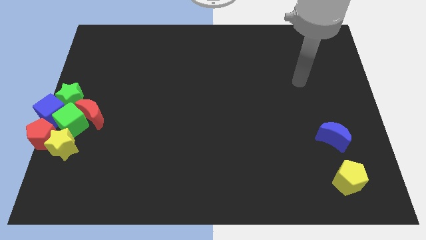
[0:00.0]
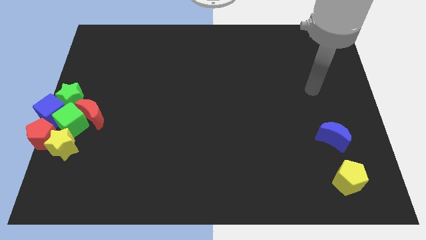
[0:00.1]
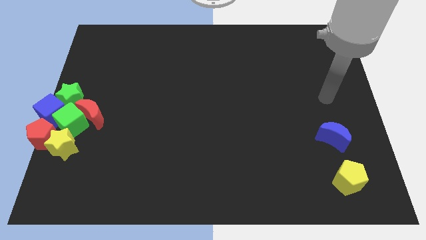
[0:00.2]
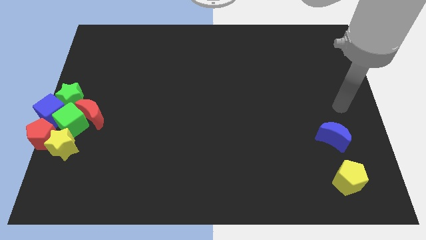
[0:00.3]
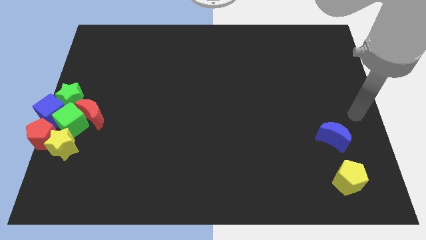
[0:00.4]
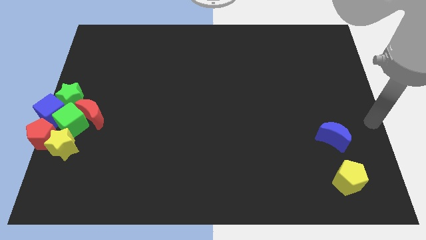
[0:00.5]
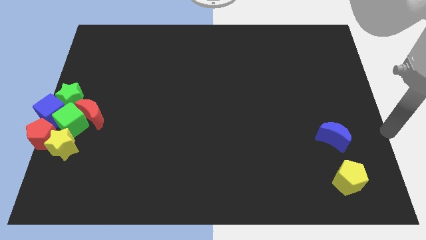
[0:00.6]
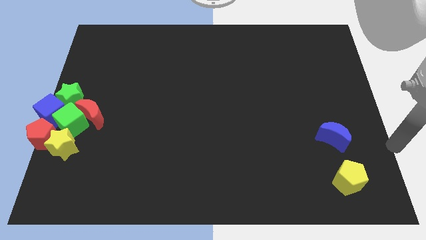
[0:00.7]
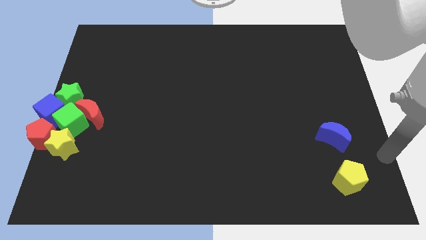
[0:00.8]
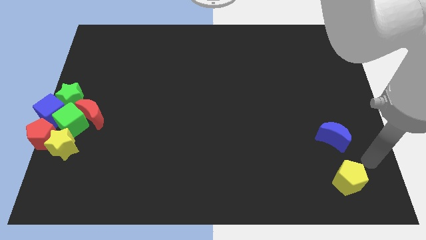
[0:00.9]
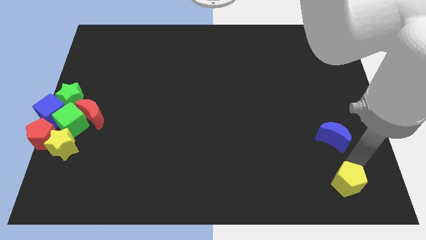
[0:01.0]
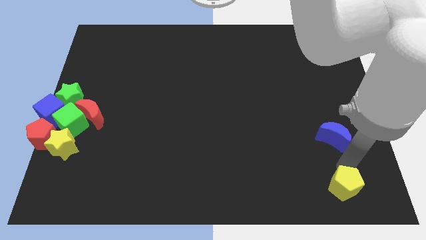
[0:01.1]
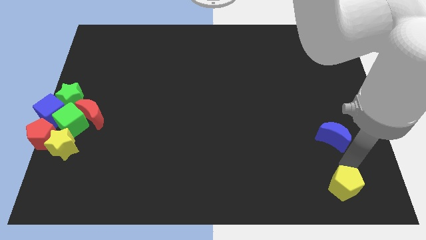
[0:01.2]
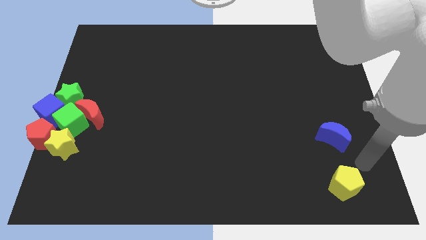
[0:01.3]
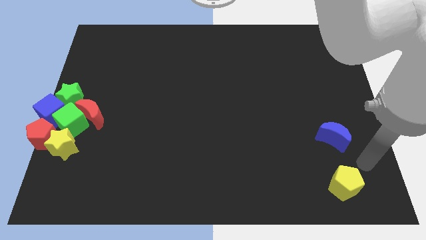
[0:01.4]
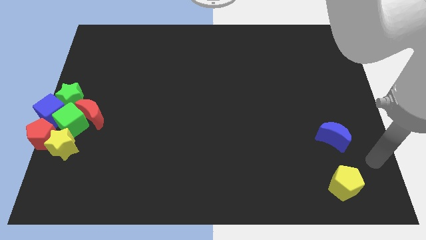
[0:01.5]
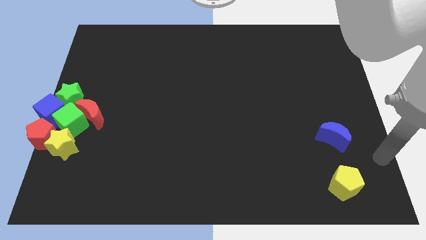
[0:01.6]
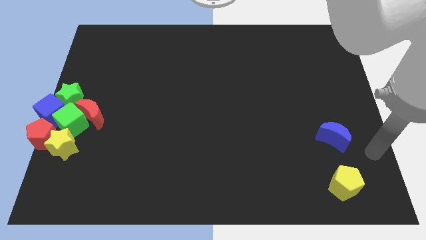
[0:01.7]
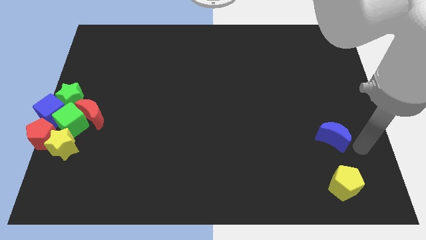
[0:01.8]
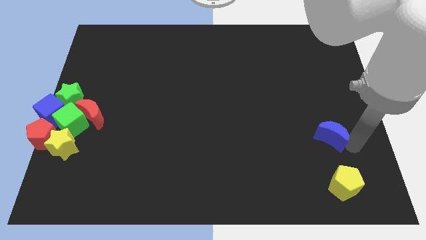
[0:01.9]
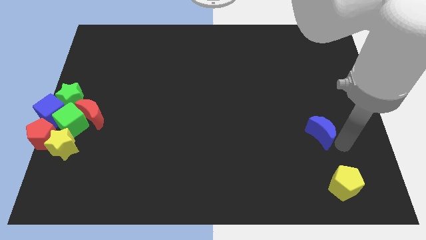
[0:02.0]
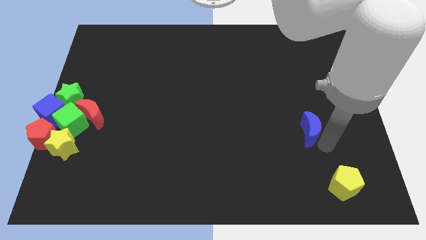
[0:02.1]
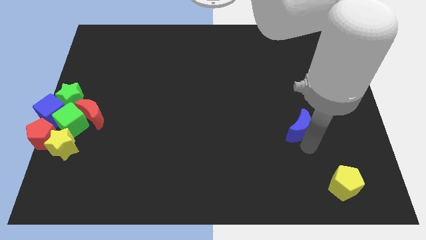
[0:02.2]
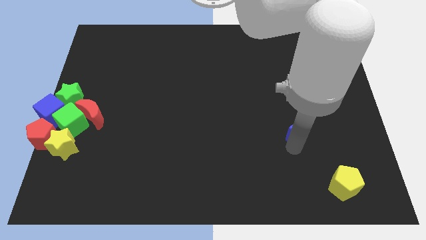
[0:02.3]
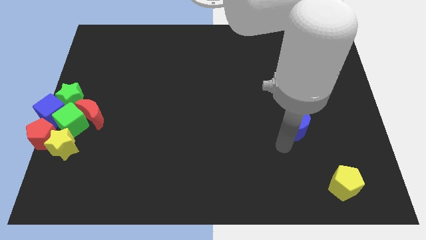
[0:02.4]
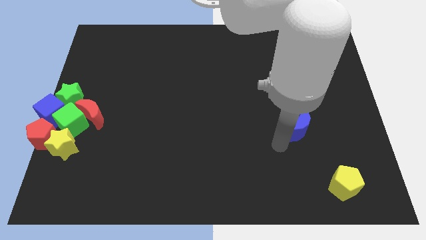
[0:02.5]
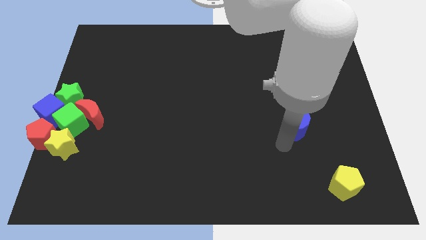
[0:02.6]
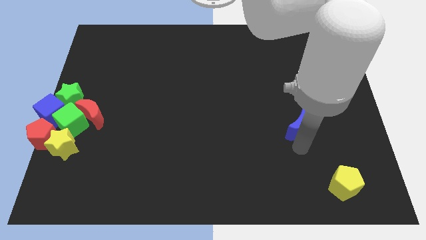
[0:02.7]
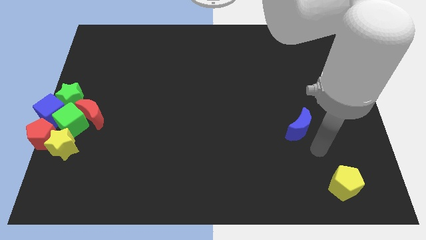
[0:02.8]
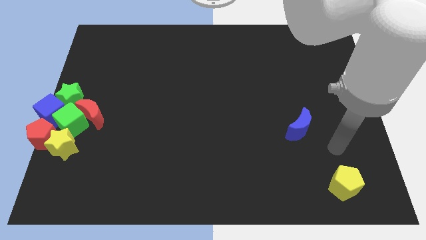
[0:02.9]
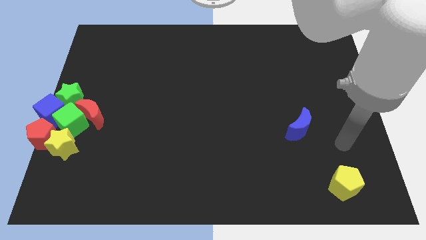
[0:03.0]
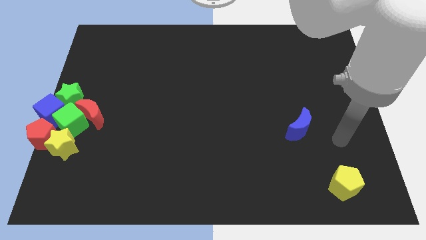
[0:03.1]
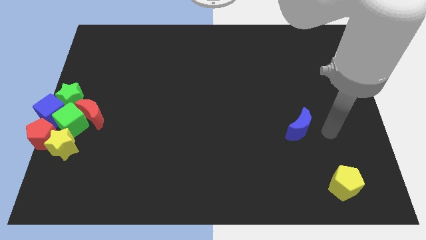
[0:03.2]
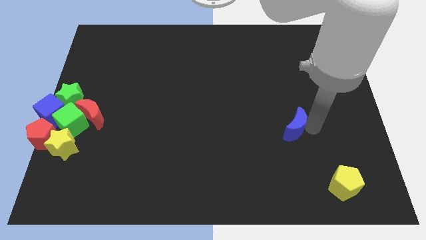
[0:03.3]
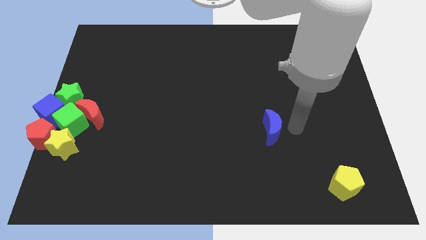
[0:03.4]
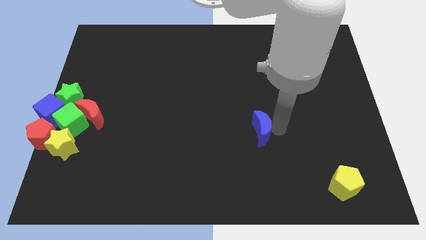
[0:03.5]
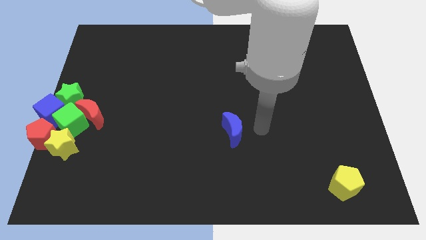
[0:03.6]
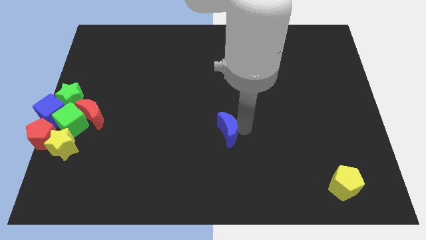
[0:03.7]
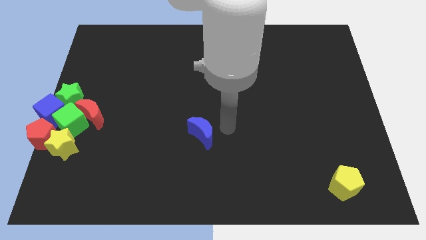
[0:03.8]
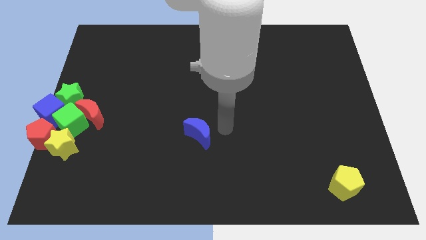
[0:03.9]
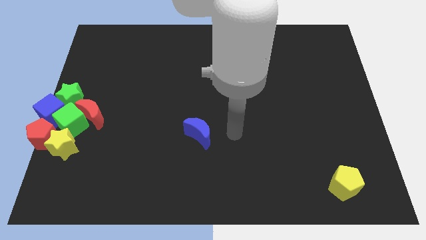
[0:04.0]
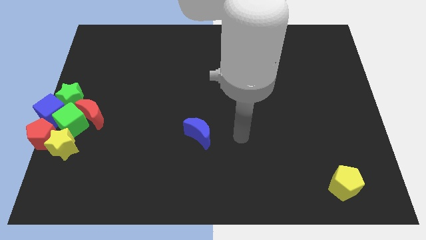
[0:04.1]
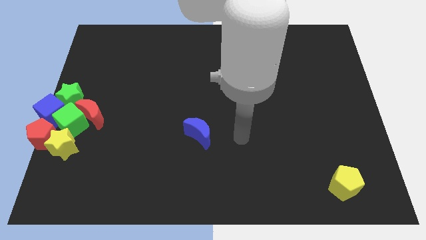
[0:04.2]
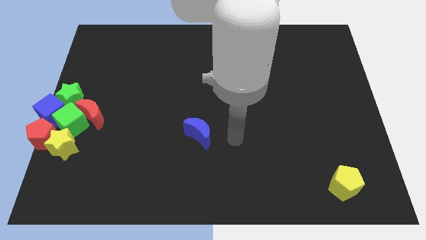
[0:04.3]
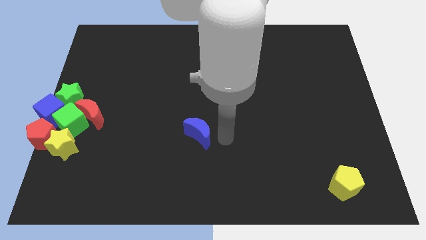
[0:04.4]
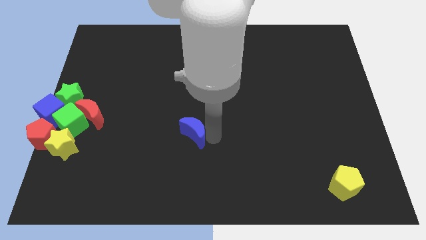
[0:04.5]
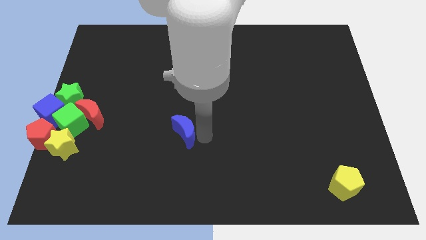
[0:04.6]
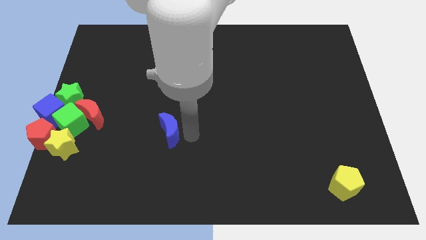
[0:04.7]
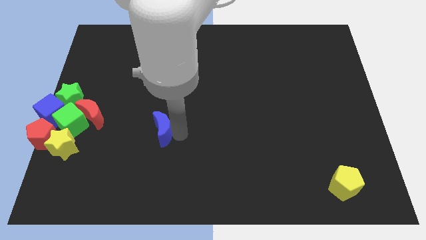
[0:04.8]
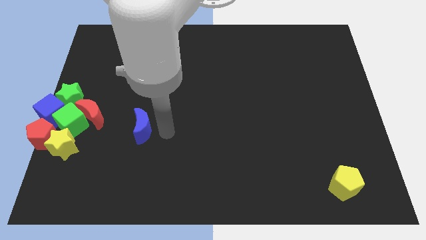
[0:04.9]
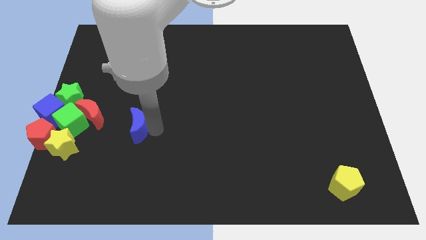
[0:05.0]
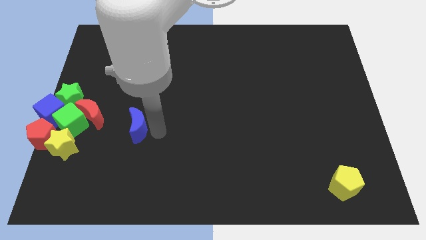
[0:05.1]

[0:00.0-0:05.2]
place blue moon to the right of red moon

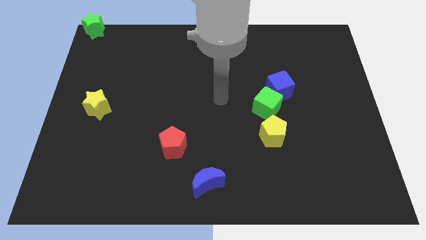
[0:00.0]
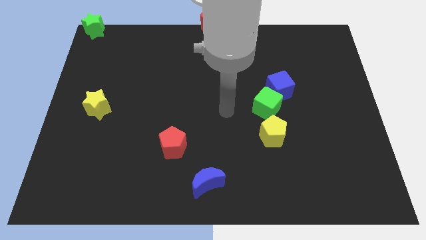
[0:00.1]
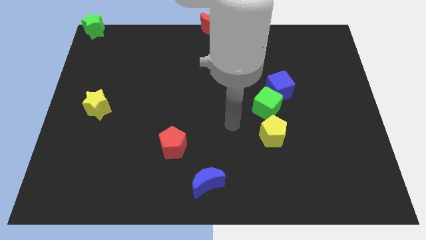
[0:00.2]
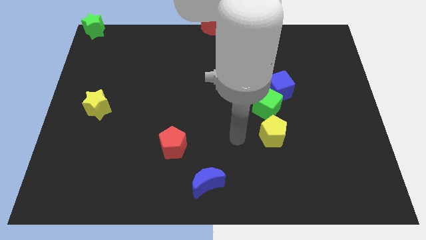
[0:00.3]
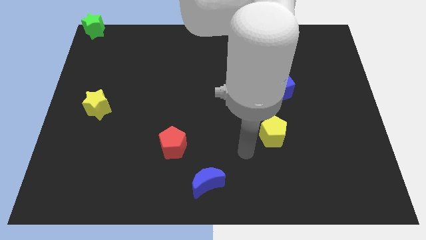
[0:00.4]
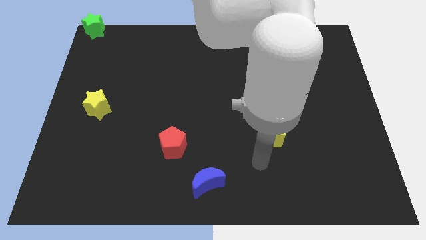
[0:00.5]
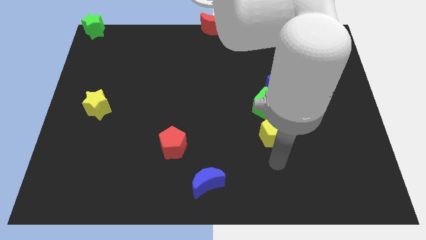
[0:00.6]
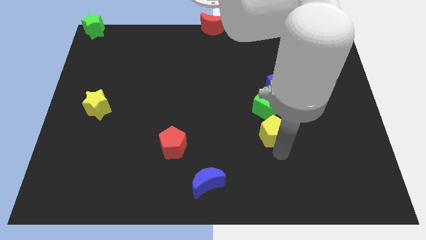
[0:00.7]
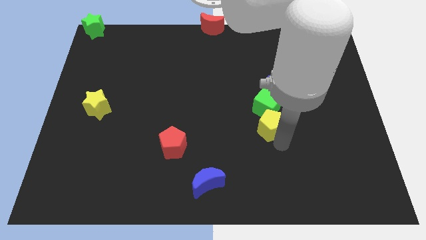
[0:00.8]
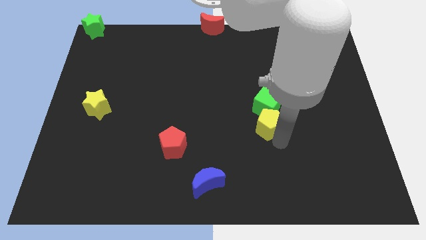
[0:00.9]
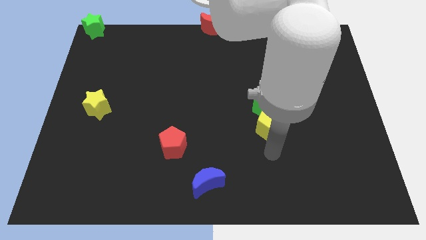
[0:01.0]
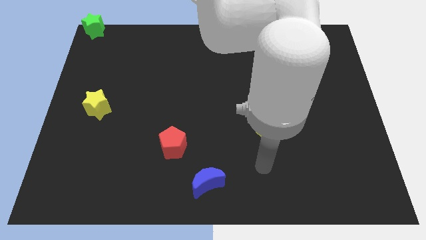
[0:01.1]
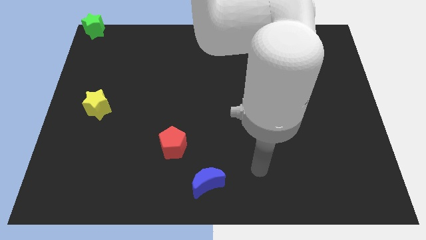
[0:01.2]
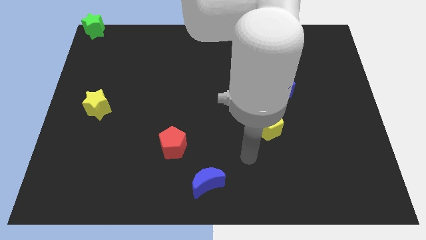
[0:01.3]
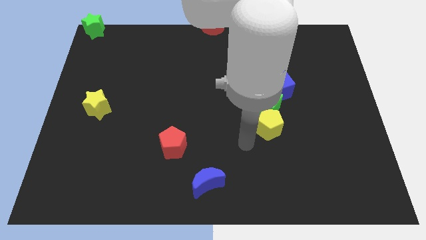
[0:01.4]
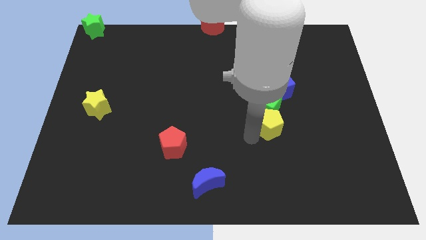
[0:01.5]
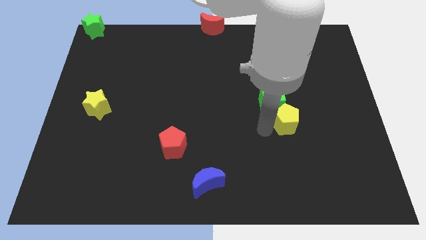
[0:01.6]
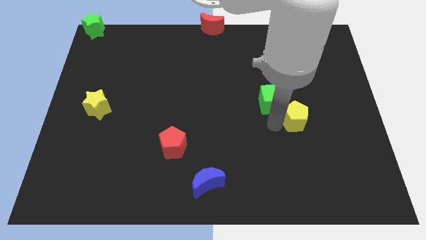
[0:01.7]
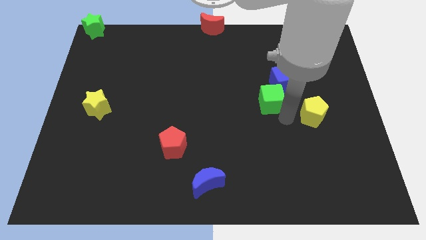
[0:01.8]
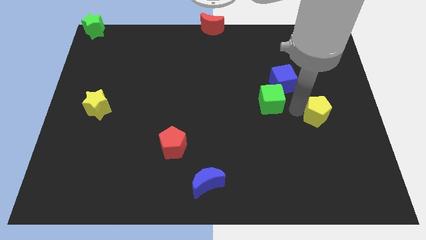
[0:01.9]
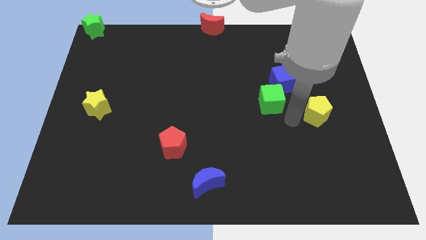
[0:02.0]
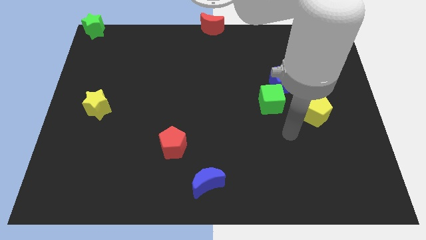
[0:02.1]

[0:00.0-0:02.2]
move the yellow pentagon to center right

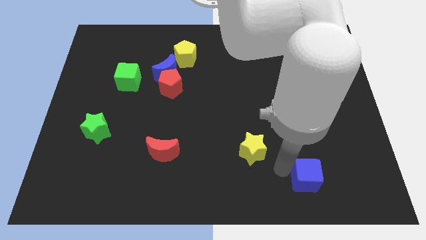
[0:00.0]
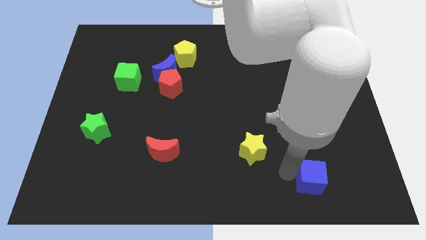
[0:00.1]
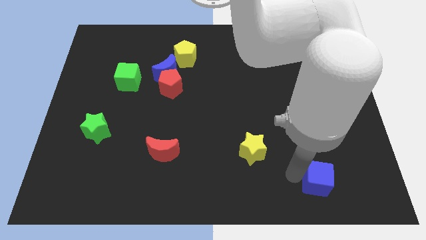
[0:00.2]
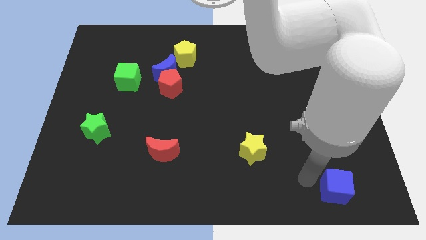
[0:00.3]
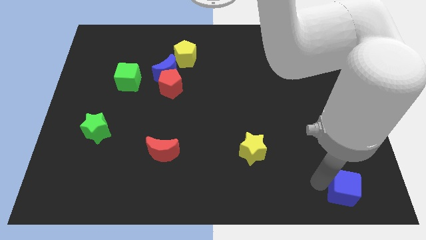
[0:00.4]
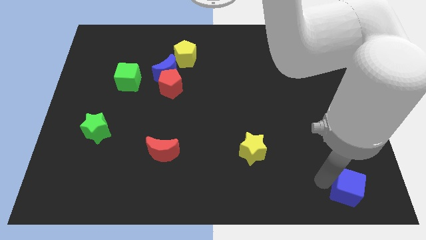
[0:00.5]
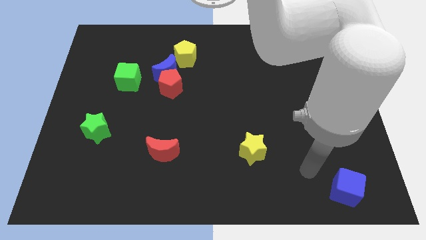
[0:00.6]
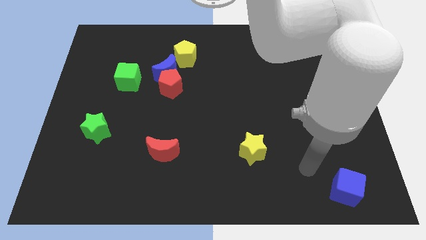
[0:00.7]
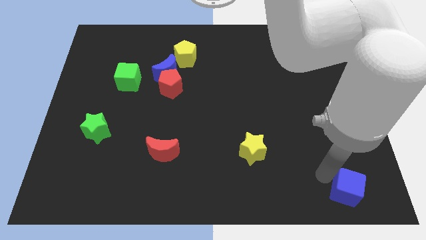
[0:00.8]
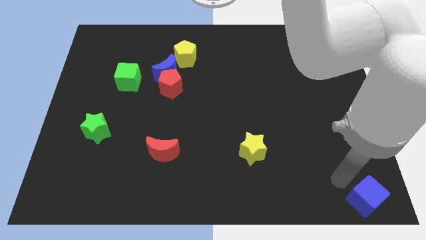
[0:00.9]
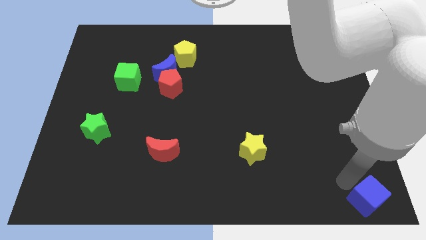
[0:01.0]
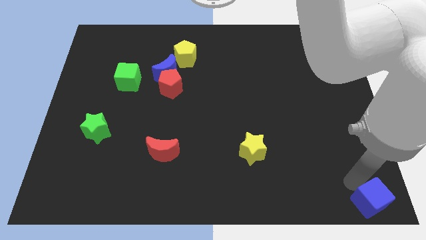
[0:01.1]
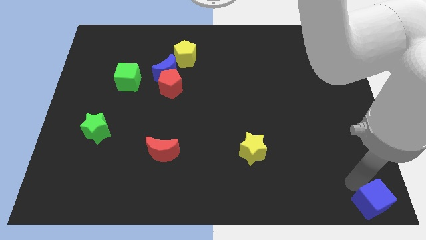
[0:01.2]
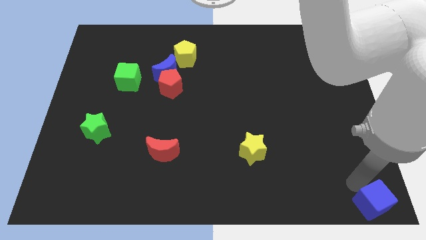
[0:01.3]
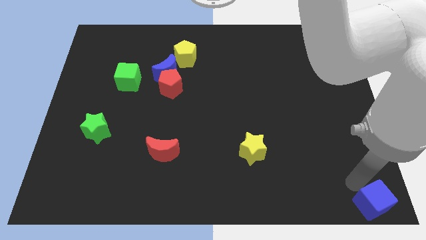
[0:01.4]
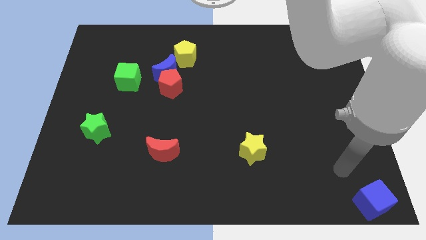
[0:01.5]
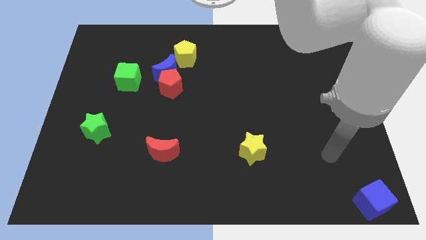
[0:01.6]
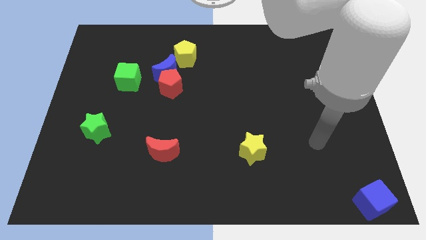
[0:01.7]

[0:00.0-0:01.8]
move the blue cube to the right bottom of the board
